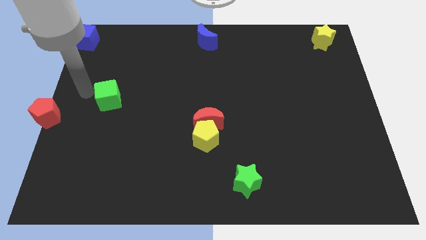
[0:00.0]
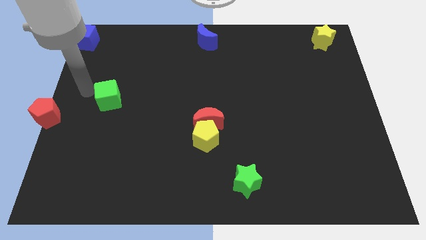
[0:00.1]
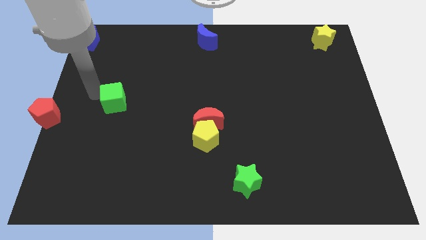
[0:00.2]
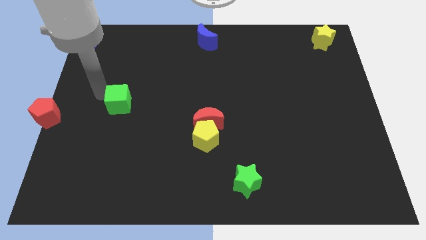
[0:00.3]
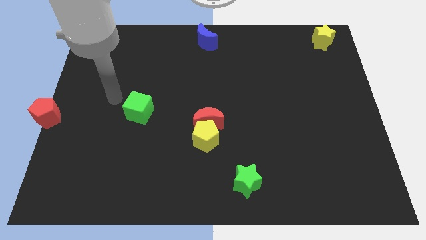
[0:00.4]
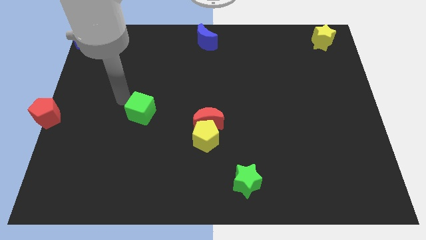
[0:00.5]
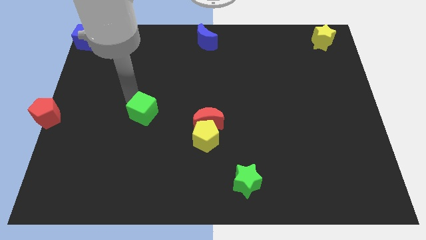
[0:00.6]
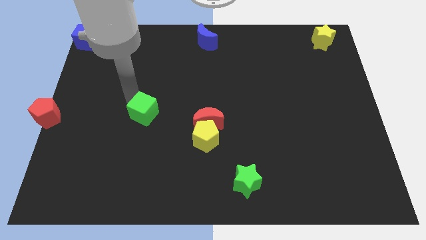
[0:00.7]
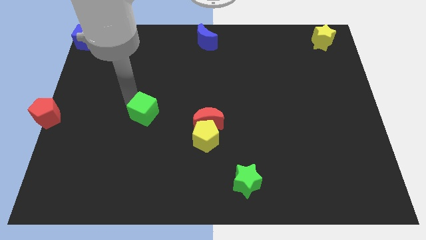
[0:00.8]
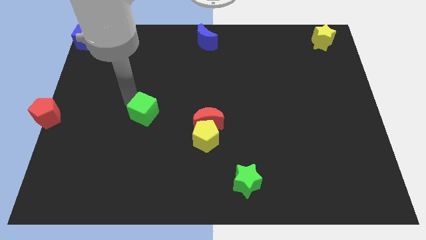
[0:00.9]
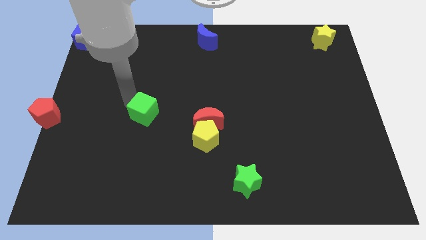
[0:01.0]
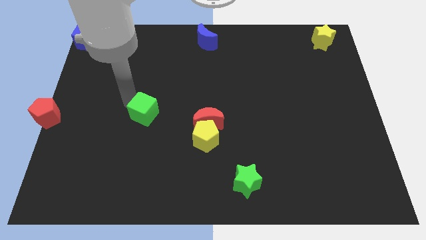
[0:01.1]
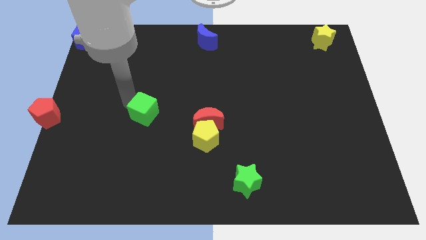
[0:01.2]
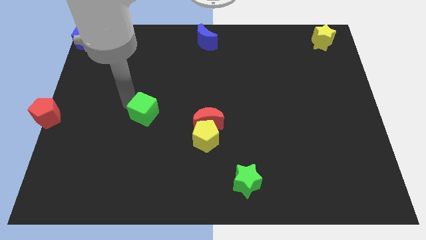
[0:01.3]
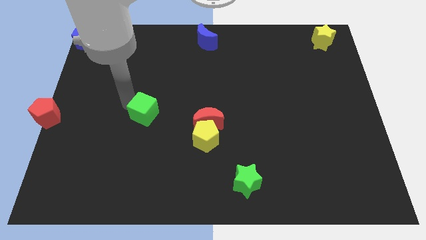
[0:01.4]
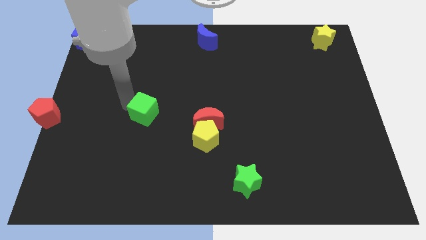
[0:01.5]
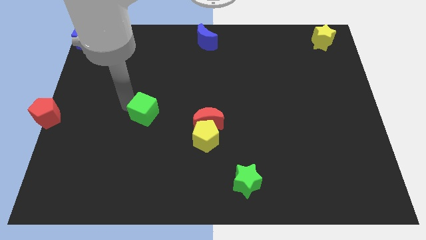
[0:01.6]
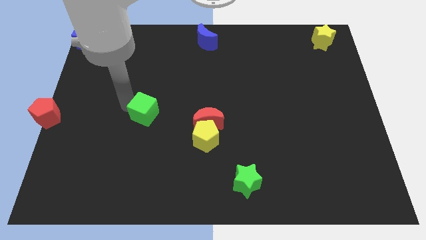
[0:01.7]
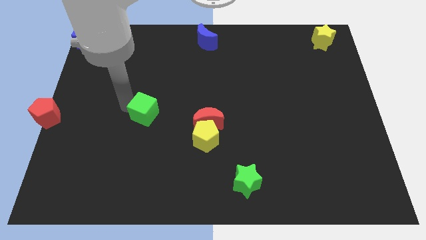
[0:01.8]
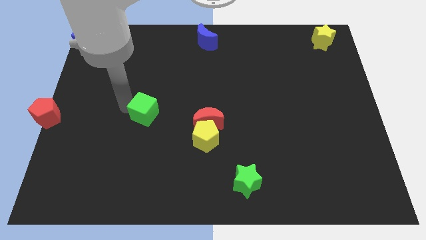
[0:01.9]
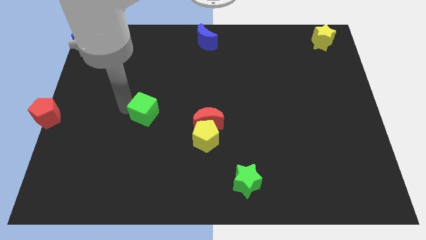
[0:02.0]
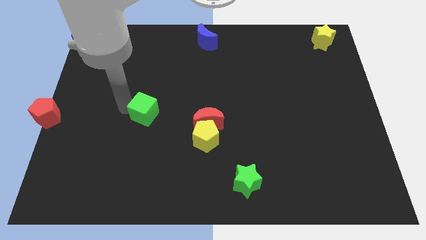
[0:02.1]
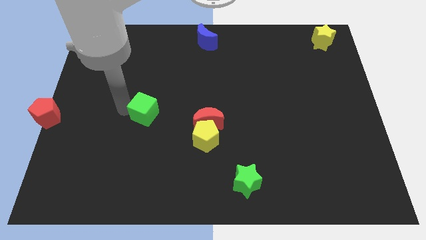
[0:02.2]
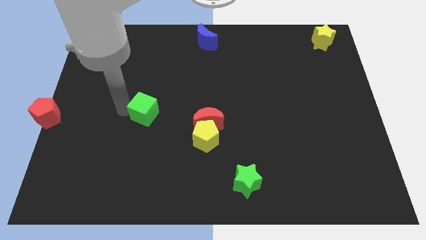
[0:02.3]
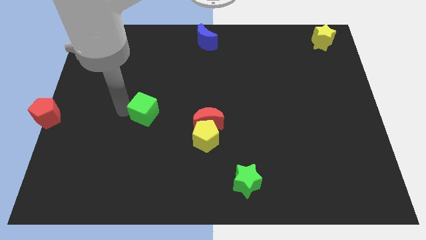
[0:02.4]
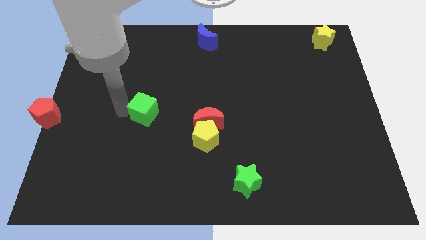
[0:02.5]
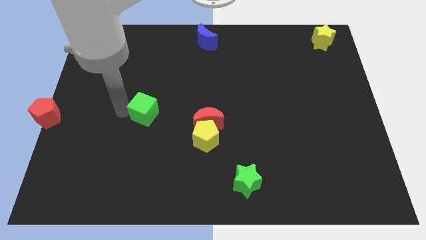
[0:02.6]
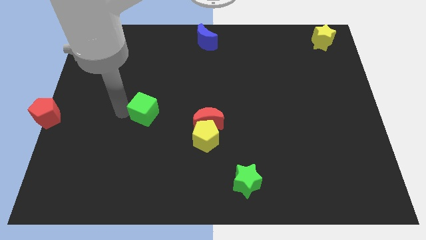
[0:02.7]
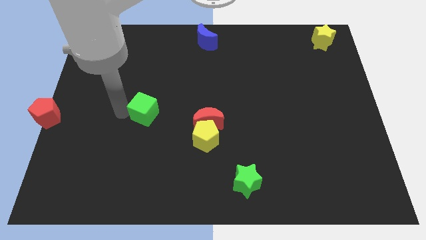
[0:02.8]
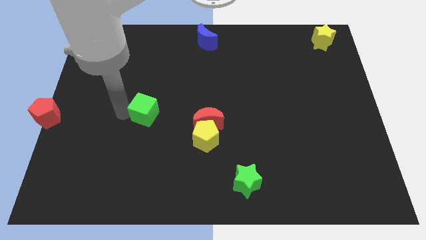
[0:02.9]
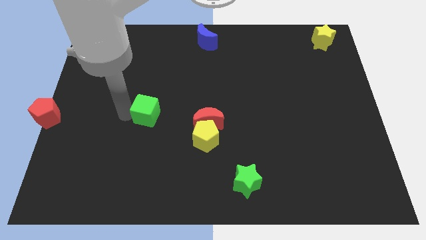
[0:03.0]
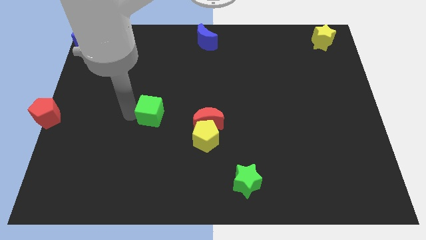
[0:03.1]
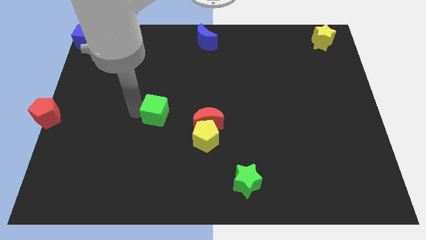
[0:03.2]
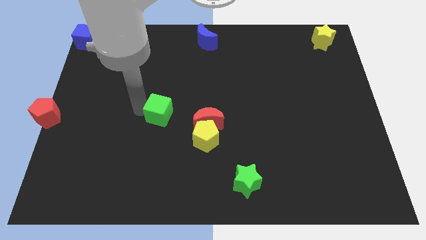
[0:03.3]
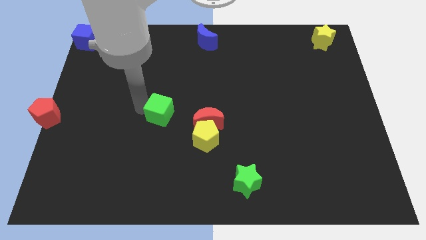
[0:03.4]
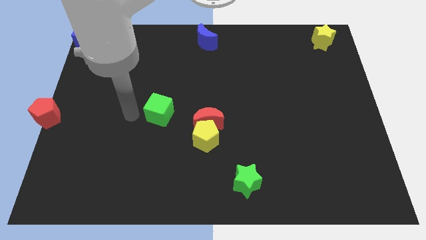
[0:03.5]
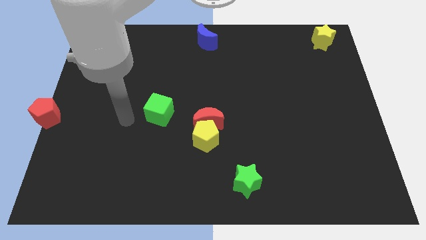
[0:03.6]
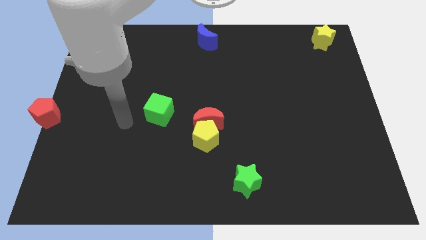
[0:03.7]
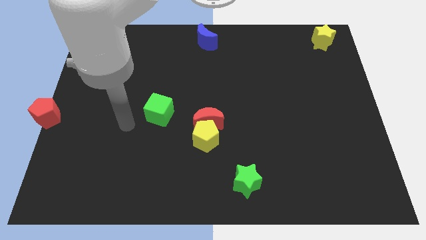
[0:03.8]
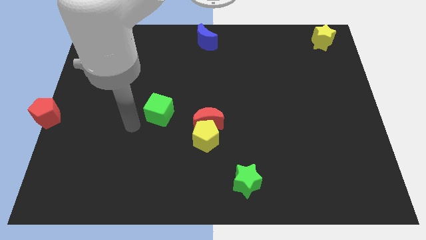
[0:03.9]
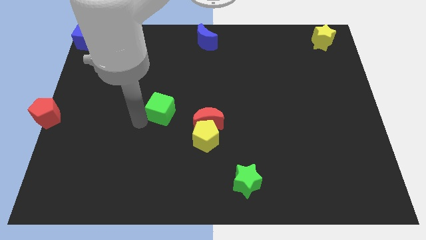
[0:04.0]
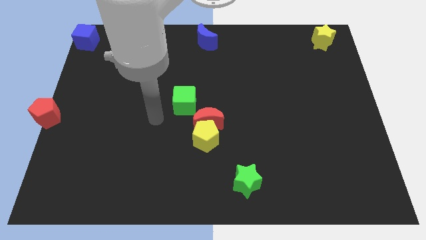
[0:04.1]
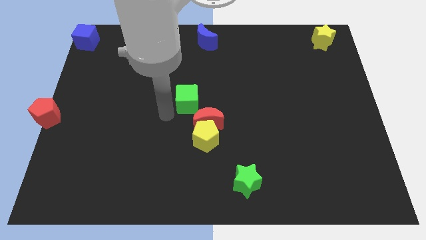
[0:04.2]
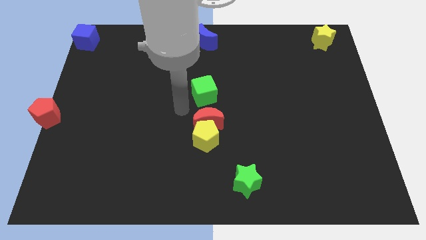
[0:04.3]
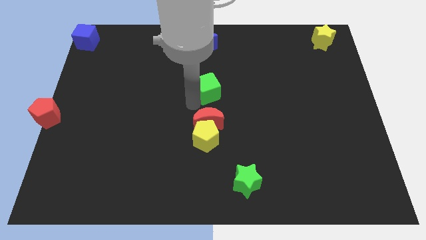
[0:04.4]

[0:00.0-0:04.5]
place the green cube above the red crescent

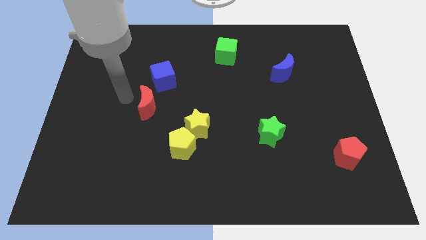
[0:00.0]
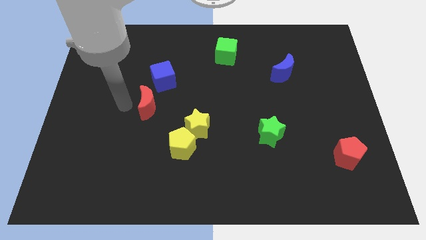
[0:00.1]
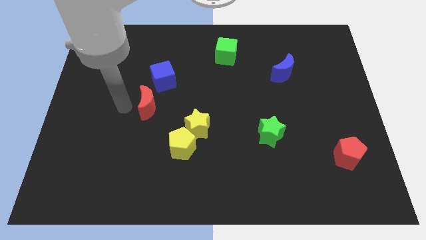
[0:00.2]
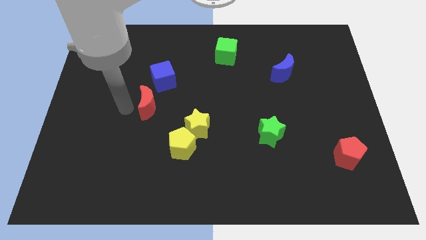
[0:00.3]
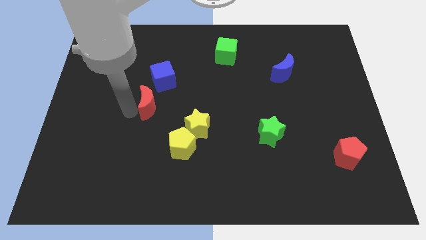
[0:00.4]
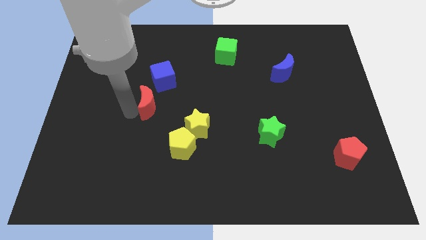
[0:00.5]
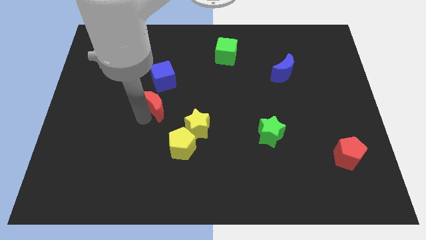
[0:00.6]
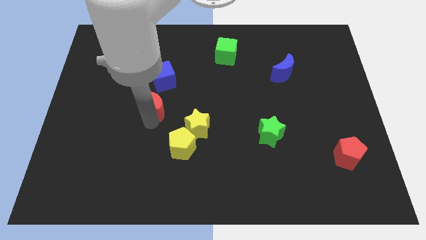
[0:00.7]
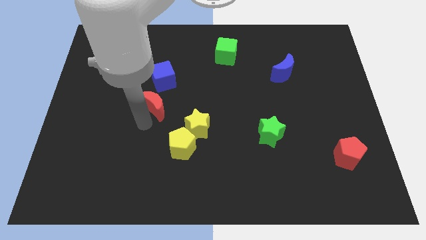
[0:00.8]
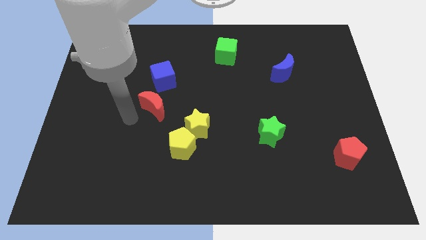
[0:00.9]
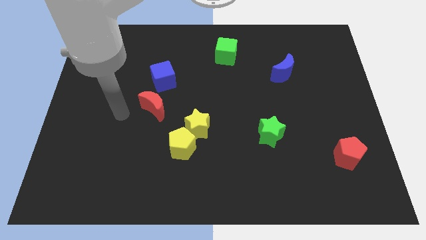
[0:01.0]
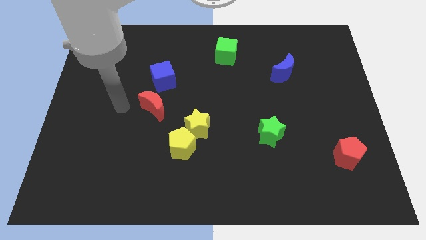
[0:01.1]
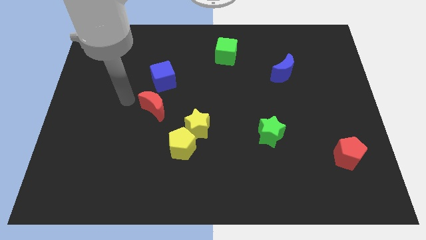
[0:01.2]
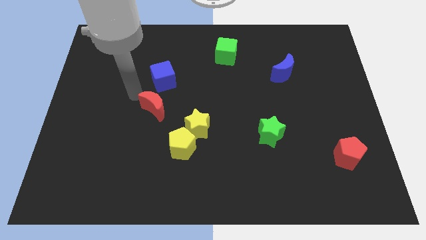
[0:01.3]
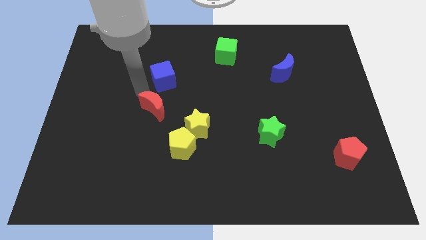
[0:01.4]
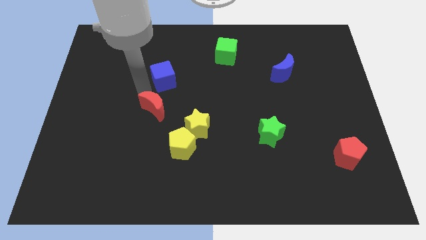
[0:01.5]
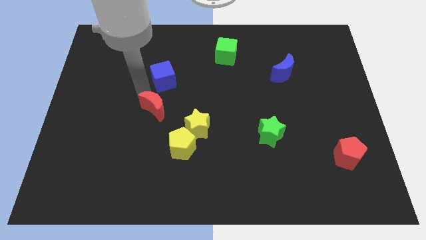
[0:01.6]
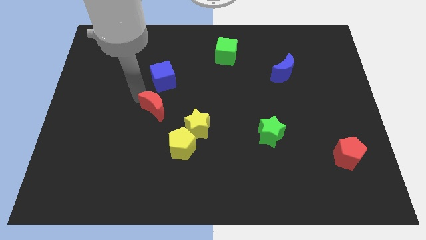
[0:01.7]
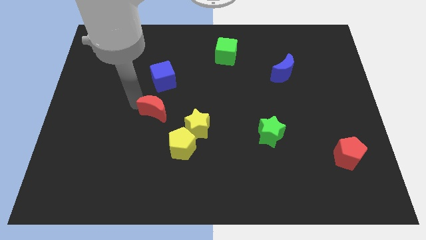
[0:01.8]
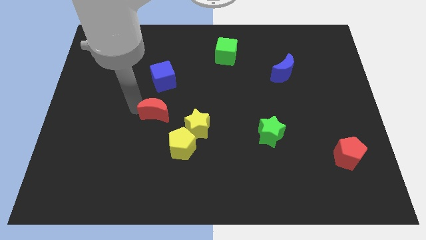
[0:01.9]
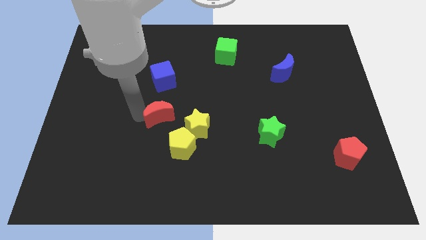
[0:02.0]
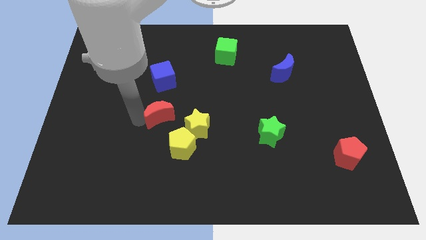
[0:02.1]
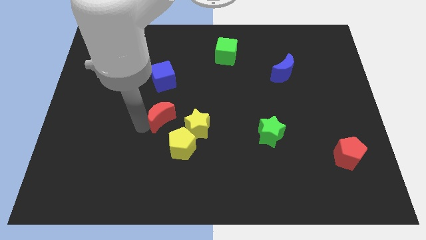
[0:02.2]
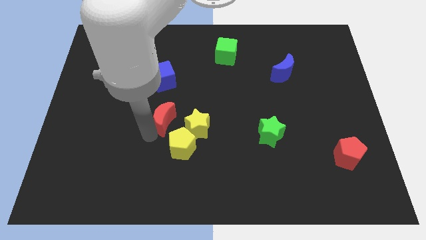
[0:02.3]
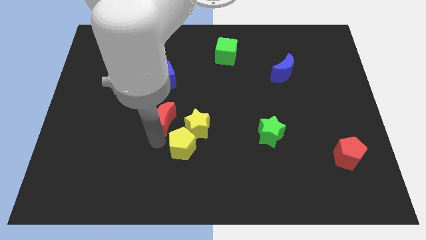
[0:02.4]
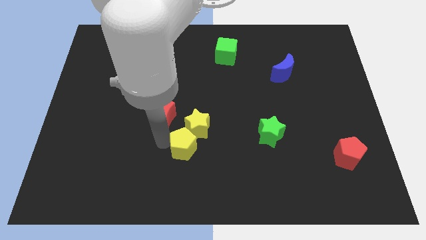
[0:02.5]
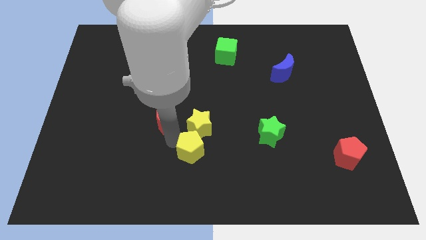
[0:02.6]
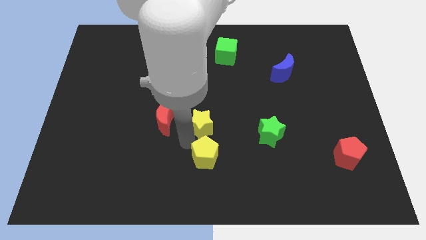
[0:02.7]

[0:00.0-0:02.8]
place your arm in between the red moon and yellow pentagon

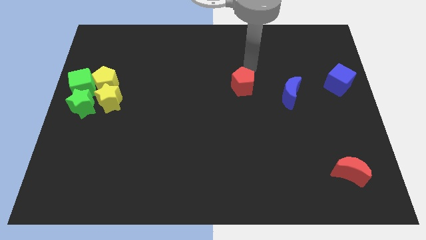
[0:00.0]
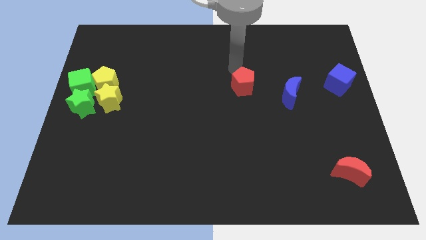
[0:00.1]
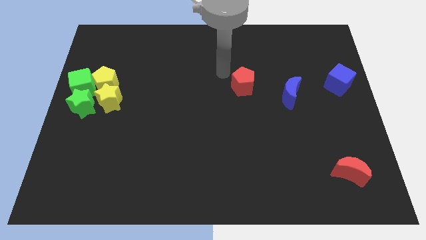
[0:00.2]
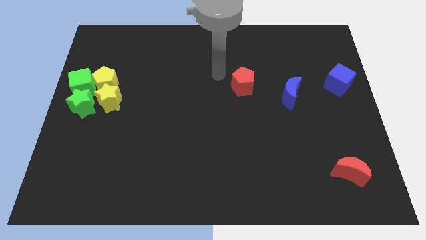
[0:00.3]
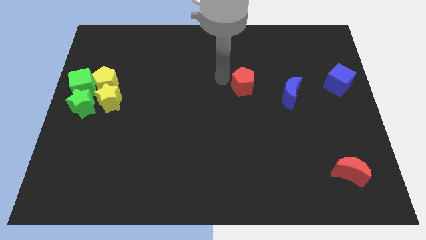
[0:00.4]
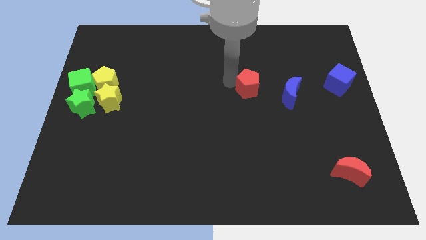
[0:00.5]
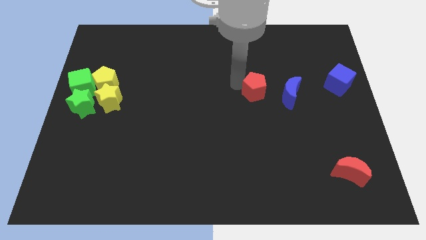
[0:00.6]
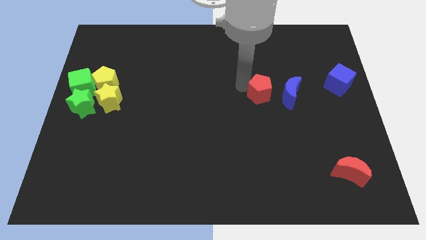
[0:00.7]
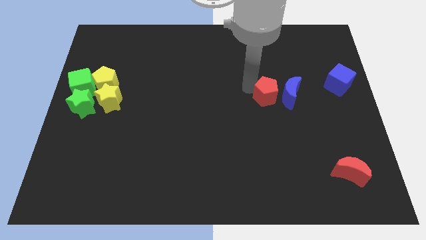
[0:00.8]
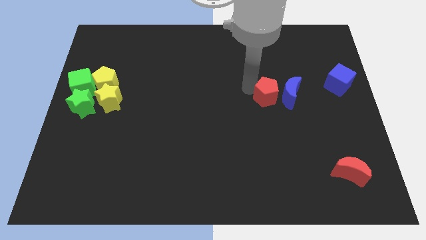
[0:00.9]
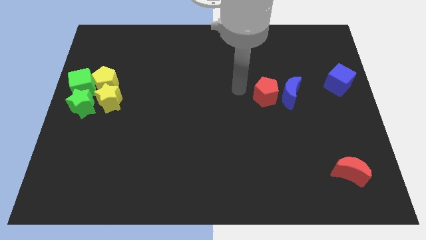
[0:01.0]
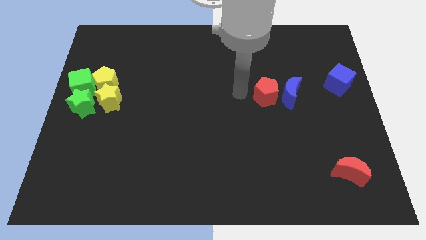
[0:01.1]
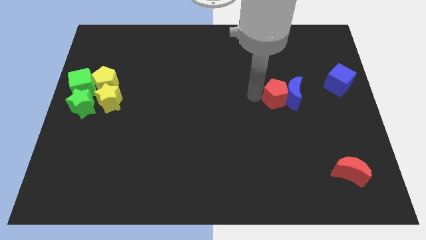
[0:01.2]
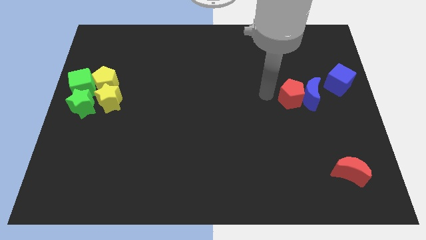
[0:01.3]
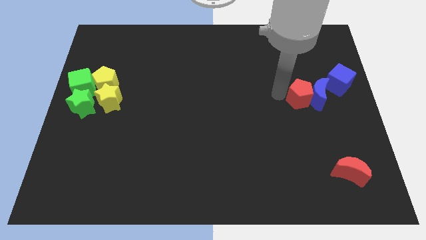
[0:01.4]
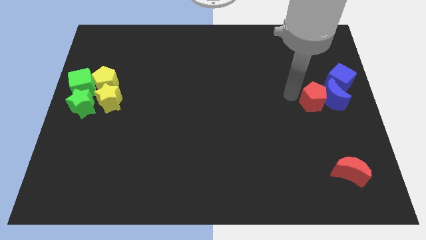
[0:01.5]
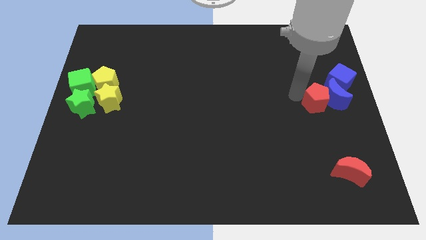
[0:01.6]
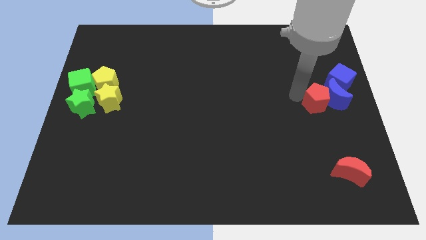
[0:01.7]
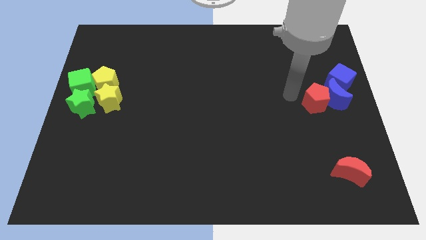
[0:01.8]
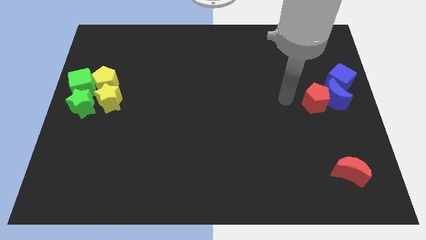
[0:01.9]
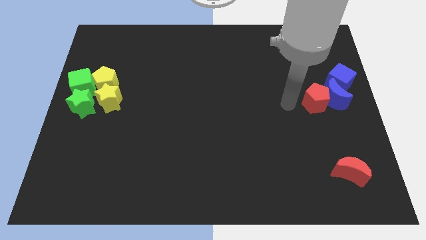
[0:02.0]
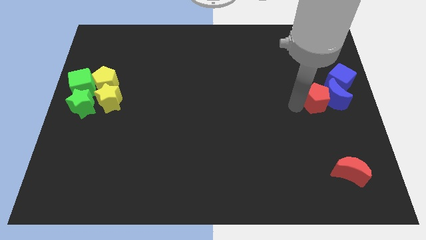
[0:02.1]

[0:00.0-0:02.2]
push the red pentagon into blue cresent
